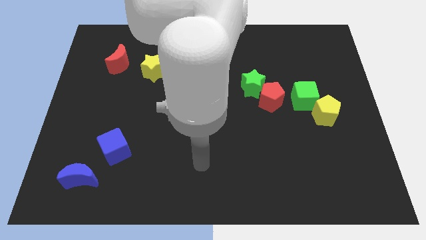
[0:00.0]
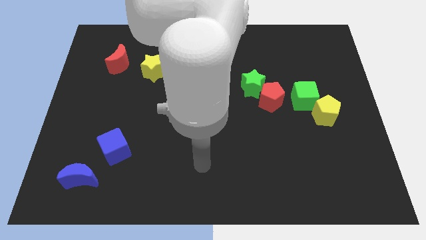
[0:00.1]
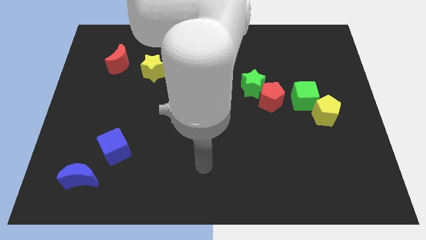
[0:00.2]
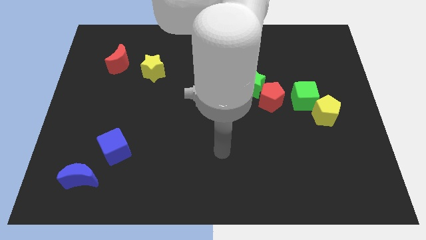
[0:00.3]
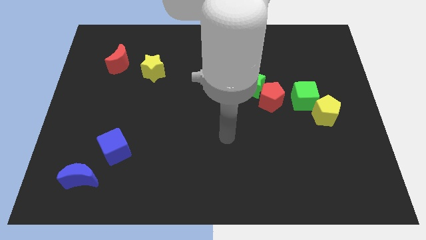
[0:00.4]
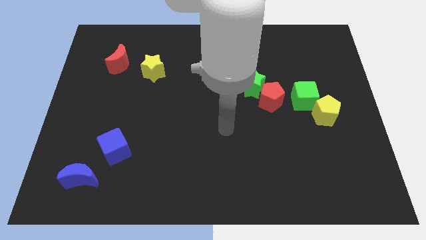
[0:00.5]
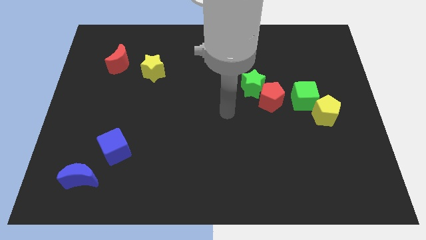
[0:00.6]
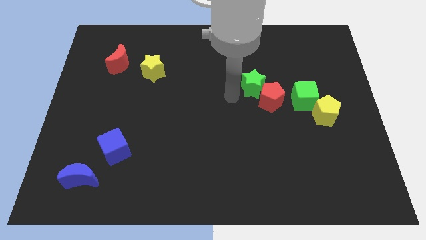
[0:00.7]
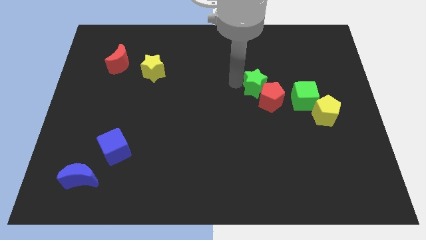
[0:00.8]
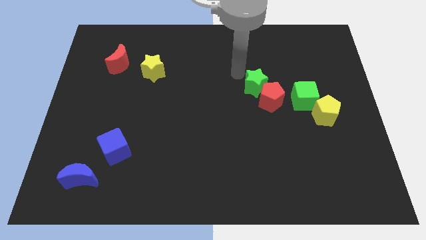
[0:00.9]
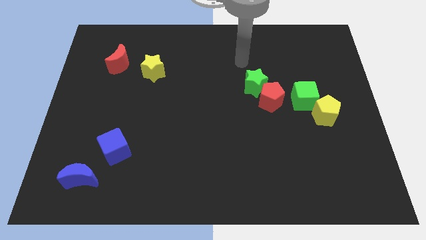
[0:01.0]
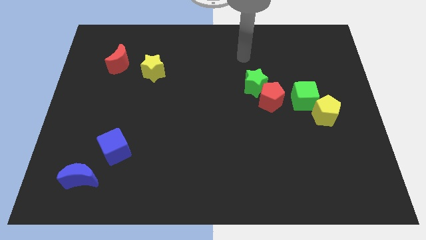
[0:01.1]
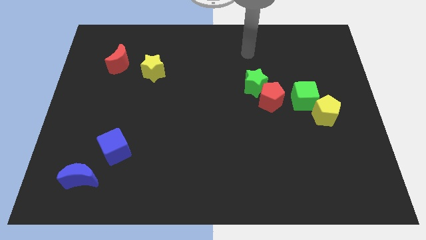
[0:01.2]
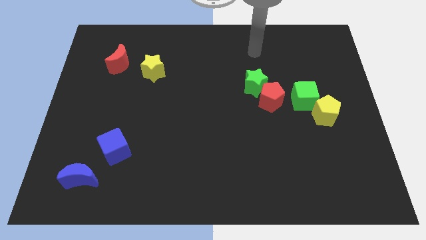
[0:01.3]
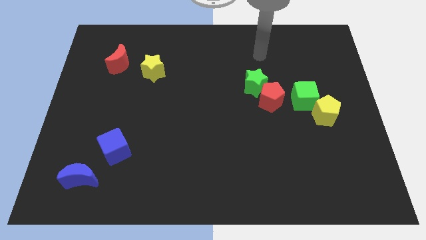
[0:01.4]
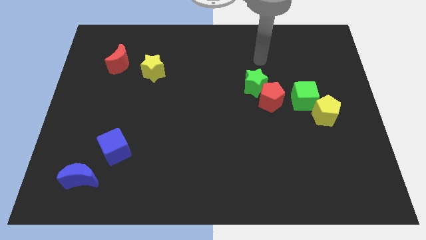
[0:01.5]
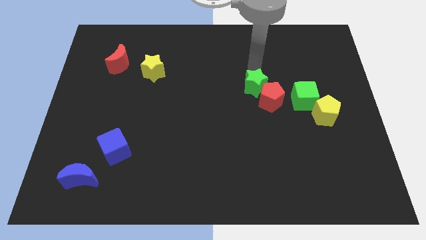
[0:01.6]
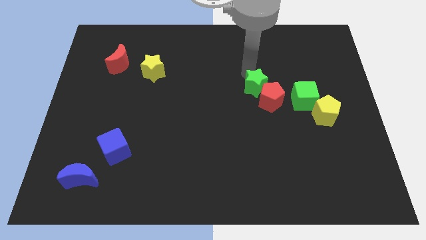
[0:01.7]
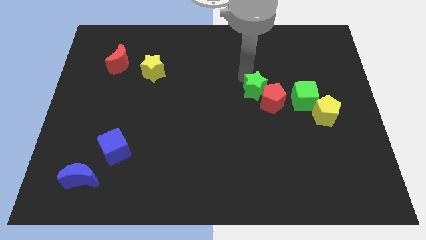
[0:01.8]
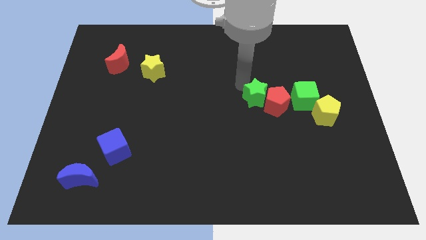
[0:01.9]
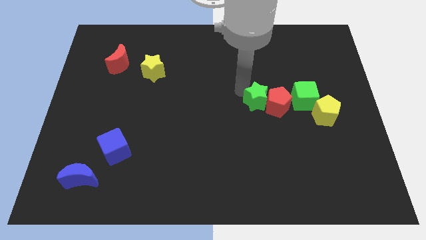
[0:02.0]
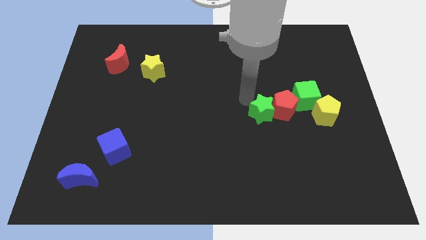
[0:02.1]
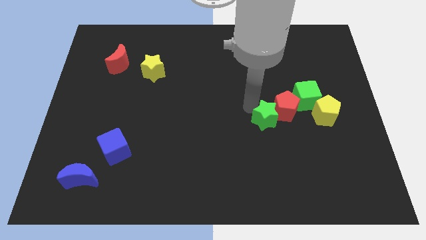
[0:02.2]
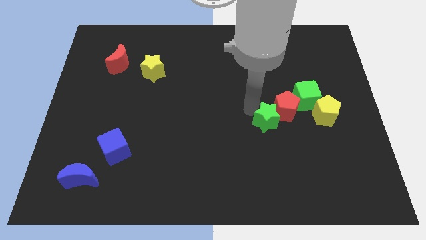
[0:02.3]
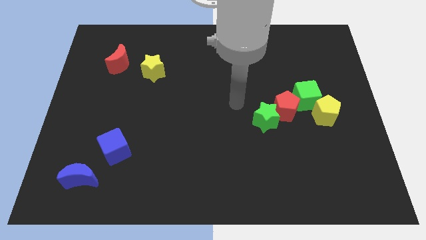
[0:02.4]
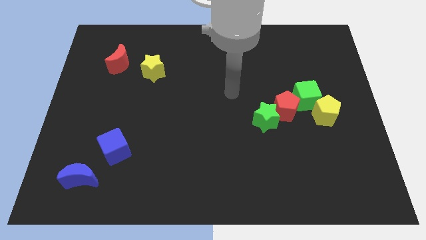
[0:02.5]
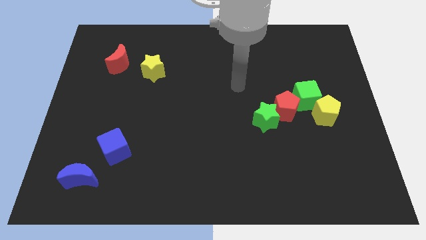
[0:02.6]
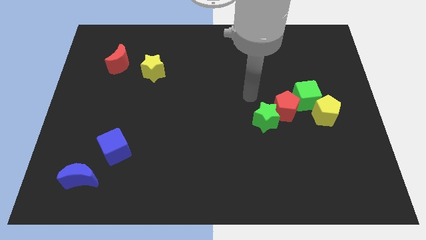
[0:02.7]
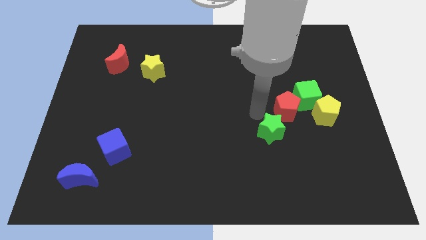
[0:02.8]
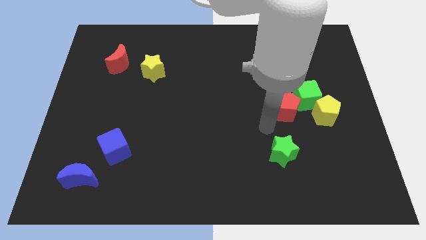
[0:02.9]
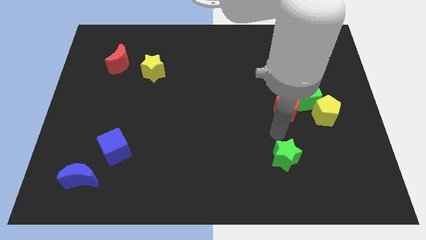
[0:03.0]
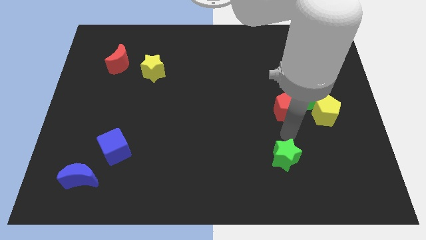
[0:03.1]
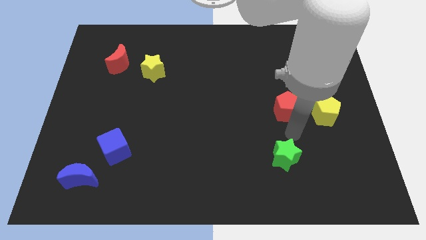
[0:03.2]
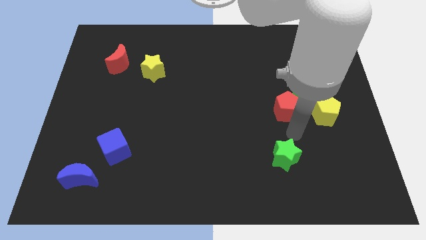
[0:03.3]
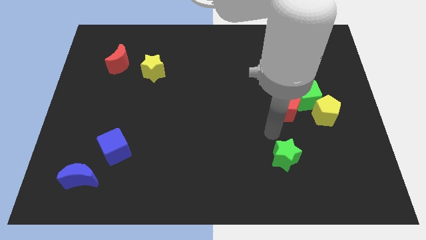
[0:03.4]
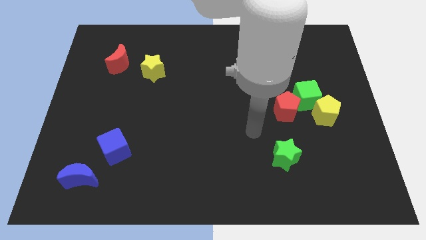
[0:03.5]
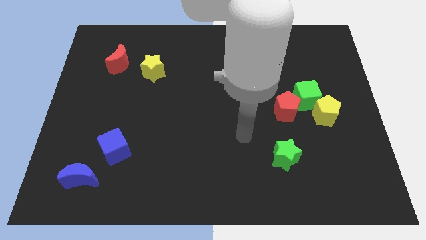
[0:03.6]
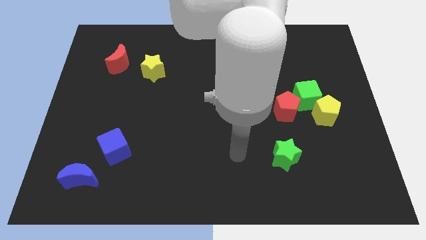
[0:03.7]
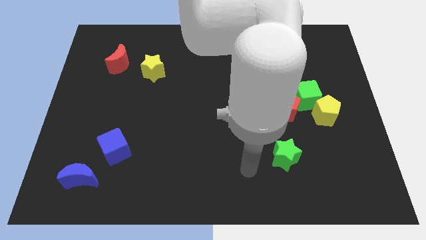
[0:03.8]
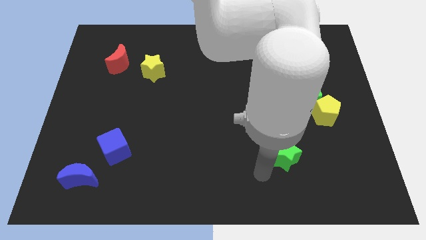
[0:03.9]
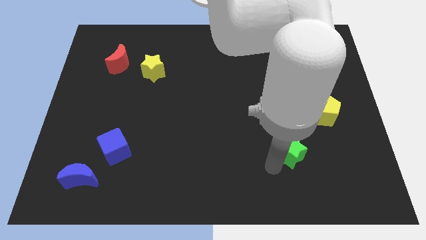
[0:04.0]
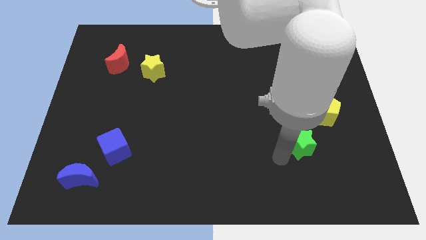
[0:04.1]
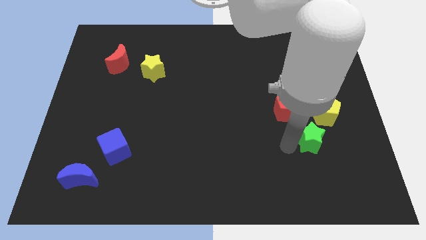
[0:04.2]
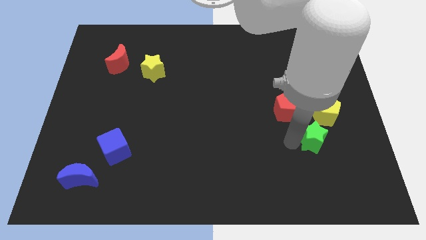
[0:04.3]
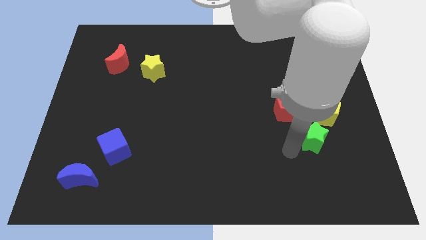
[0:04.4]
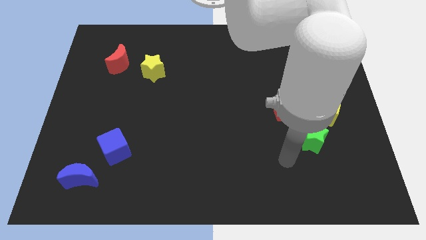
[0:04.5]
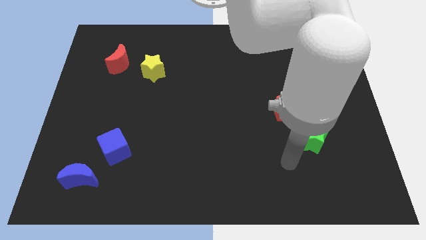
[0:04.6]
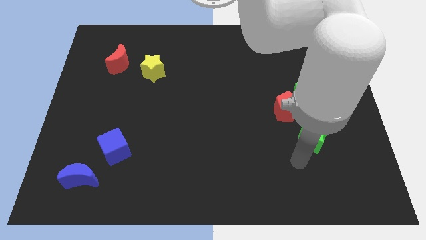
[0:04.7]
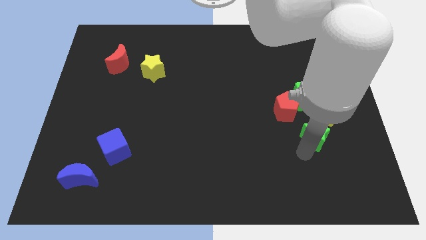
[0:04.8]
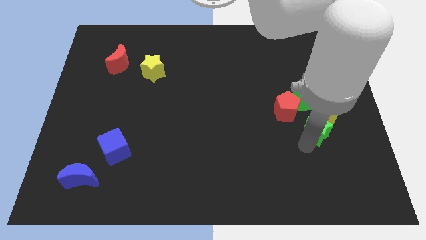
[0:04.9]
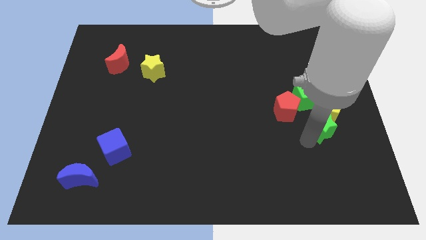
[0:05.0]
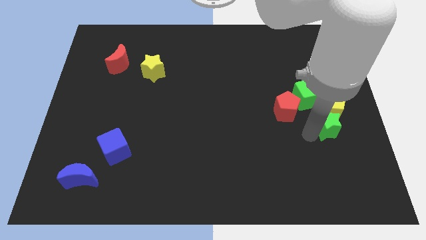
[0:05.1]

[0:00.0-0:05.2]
slide the green star towards the yellow pentagon

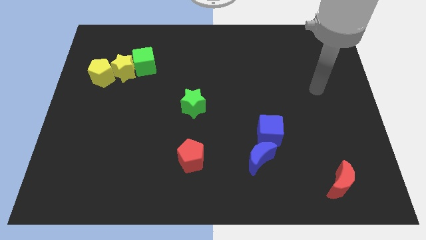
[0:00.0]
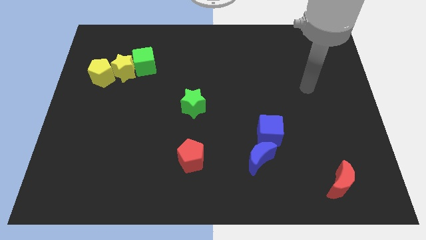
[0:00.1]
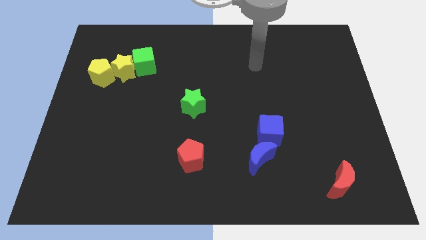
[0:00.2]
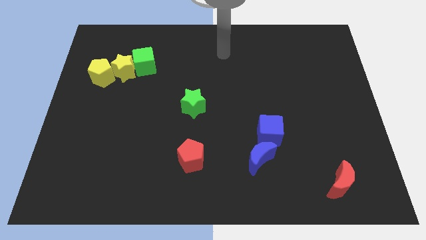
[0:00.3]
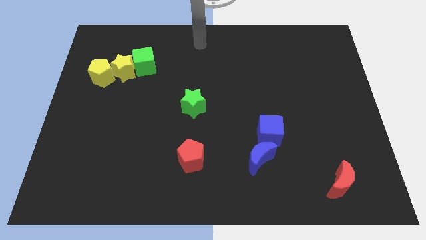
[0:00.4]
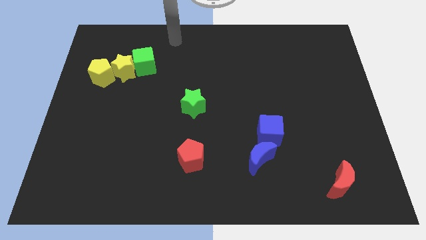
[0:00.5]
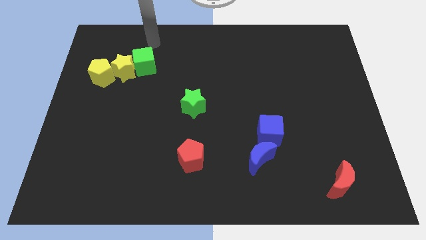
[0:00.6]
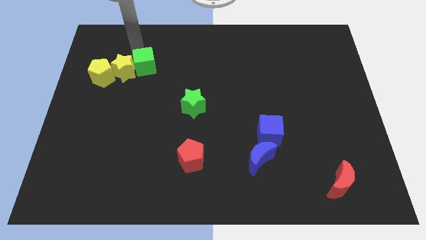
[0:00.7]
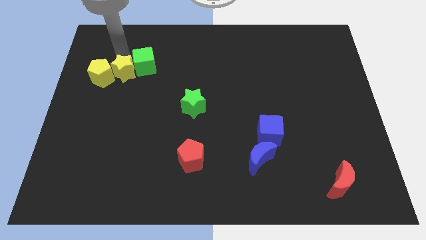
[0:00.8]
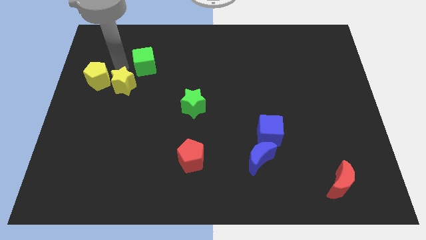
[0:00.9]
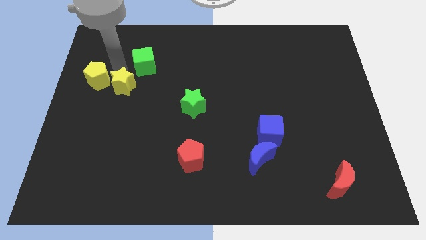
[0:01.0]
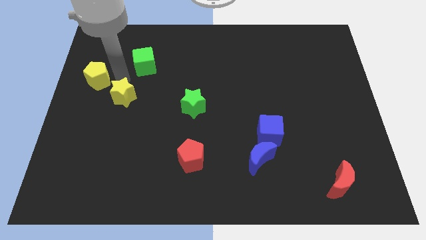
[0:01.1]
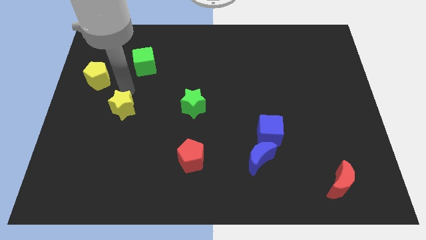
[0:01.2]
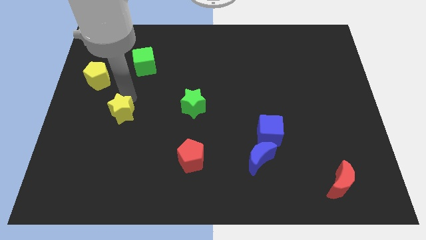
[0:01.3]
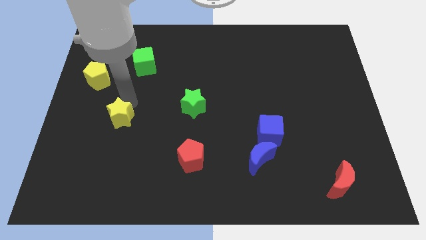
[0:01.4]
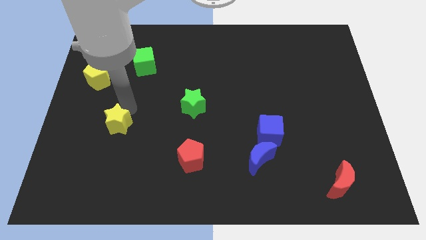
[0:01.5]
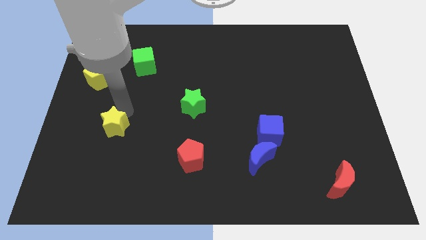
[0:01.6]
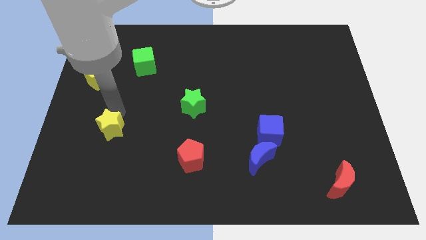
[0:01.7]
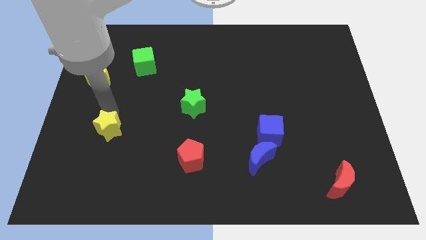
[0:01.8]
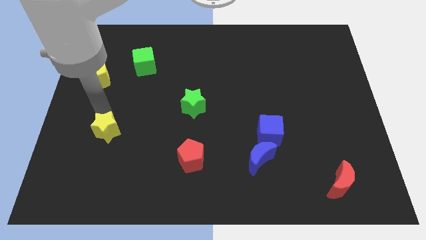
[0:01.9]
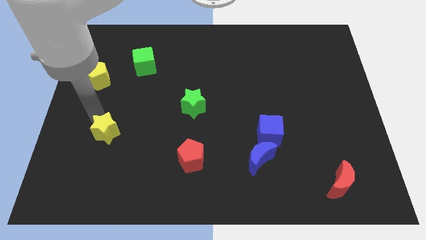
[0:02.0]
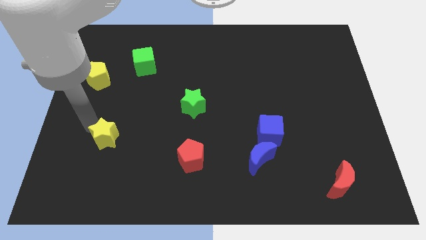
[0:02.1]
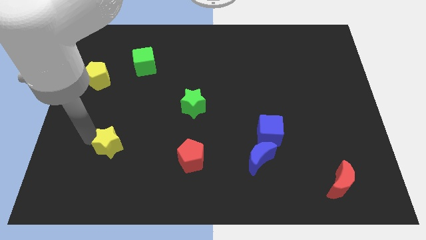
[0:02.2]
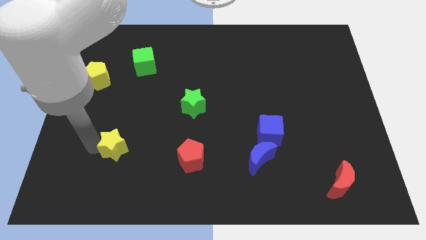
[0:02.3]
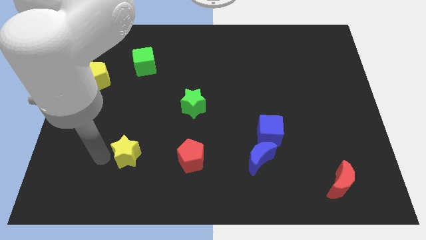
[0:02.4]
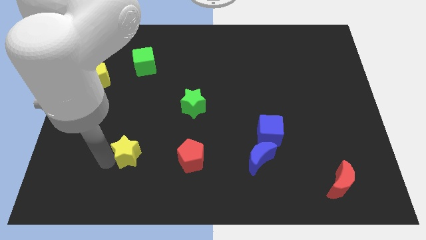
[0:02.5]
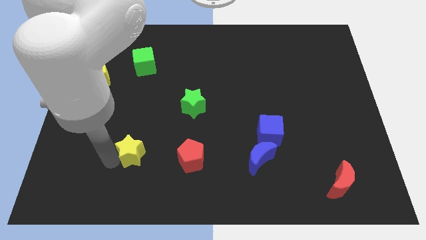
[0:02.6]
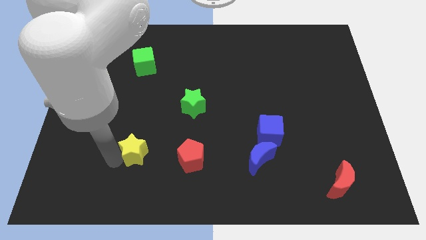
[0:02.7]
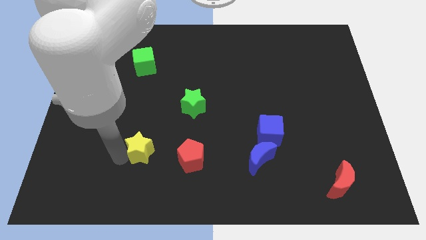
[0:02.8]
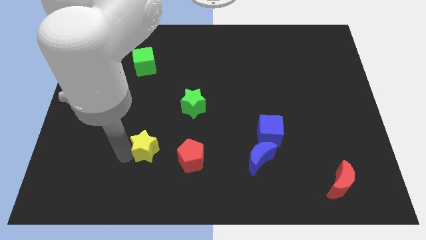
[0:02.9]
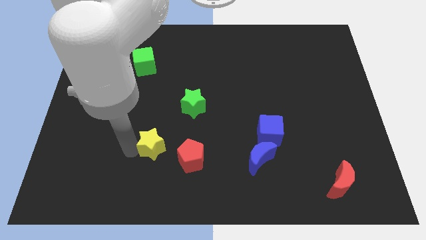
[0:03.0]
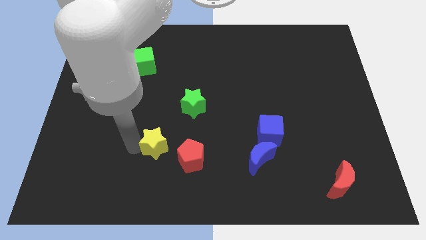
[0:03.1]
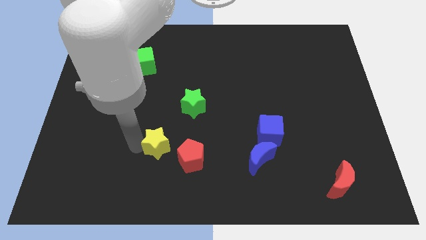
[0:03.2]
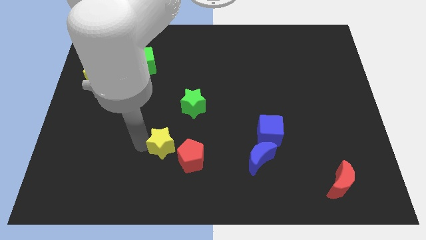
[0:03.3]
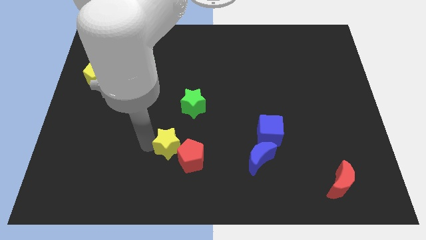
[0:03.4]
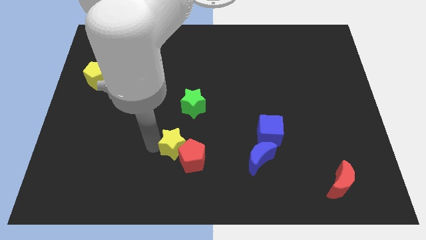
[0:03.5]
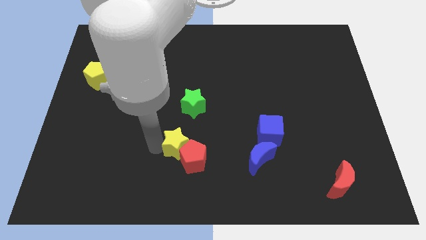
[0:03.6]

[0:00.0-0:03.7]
slide the yellow star towards the red pentagon
